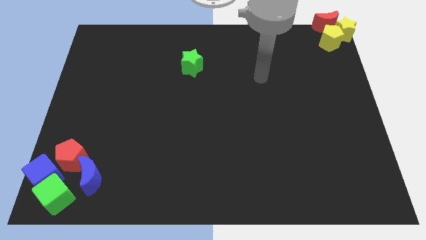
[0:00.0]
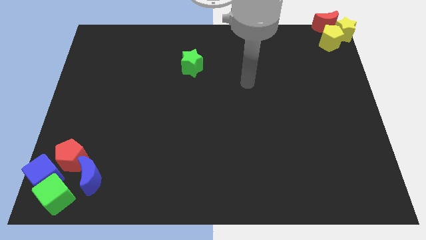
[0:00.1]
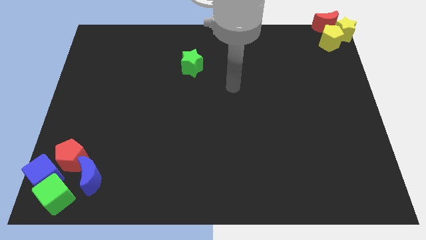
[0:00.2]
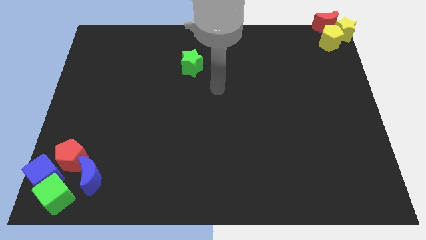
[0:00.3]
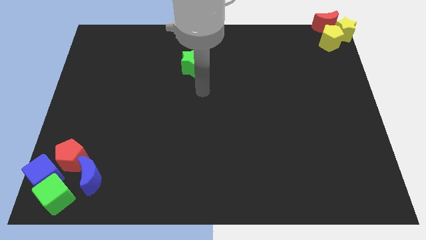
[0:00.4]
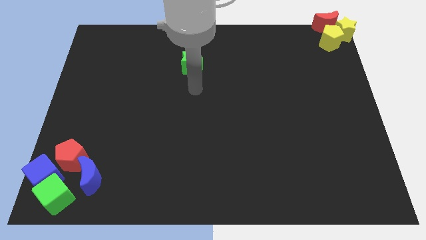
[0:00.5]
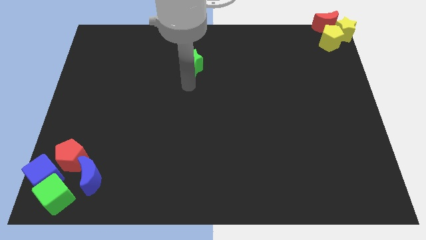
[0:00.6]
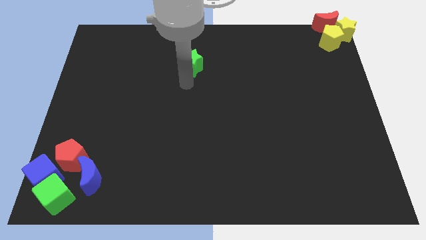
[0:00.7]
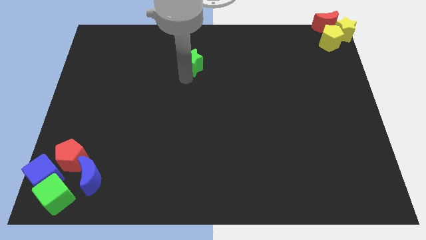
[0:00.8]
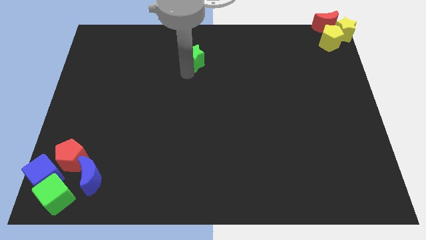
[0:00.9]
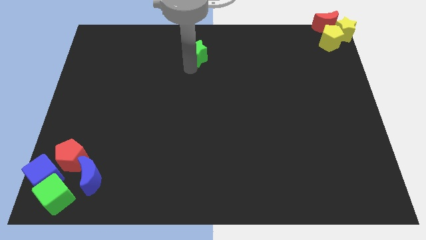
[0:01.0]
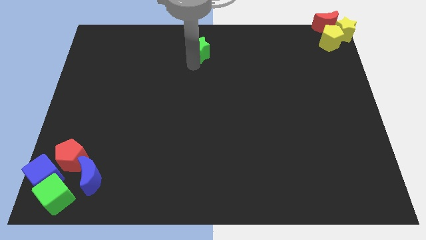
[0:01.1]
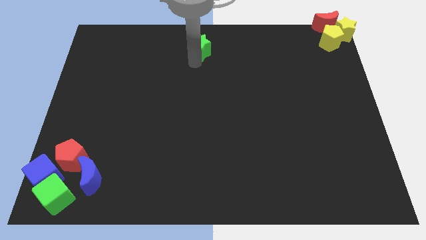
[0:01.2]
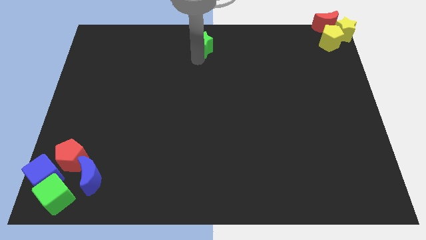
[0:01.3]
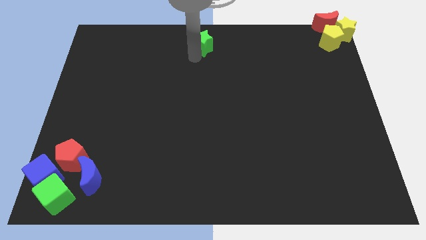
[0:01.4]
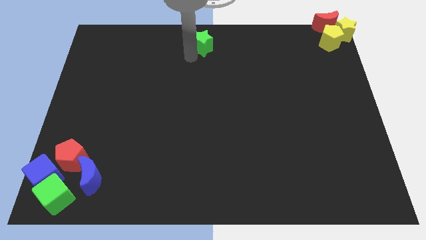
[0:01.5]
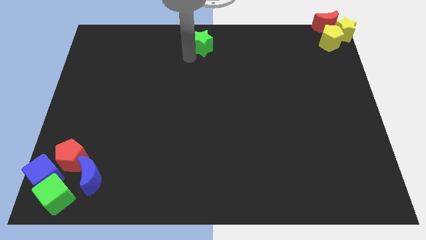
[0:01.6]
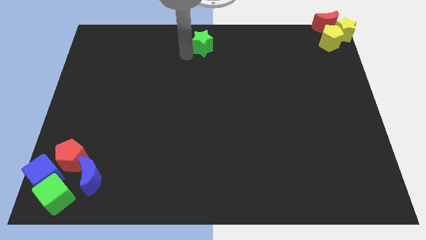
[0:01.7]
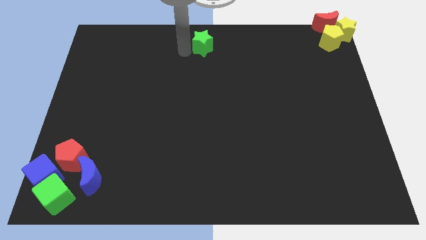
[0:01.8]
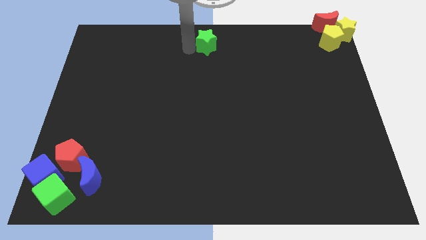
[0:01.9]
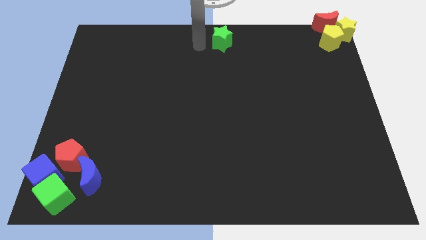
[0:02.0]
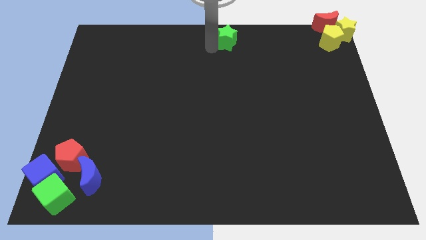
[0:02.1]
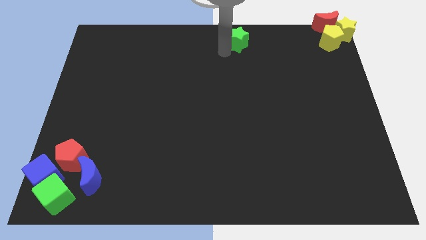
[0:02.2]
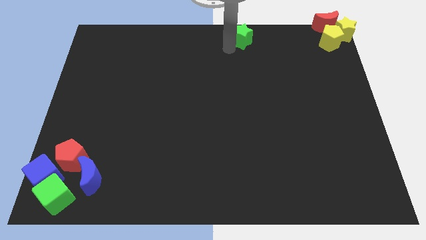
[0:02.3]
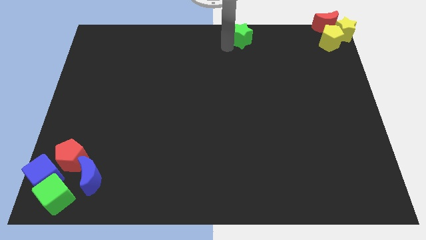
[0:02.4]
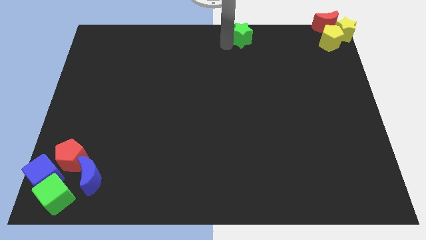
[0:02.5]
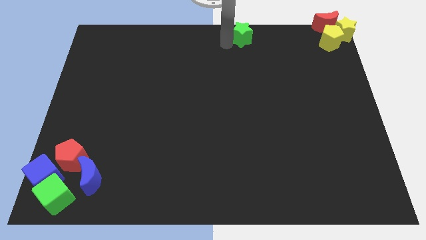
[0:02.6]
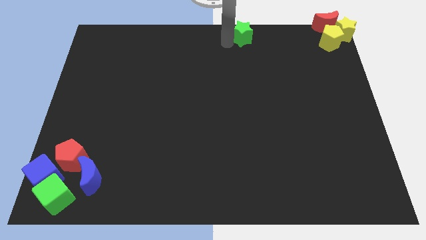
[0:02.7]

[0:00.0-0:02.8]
move the green star to top center

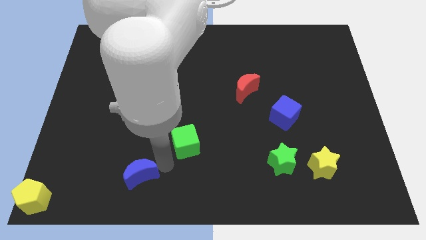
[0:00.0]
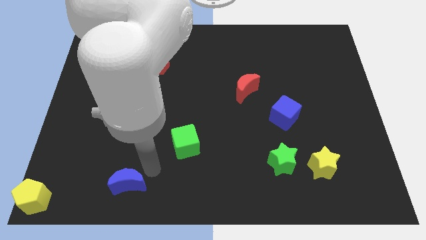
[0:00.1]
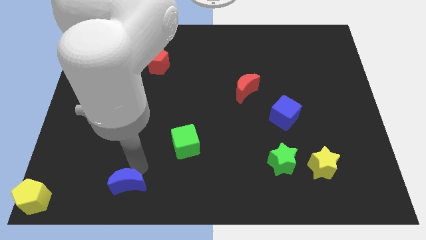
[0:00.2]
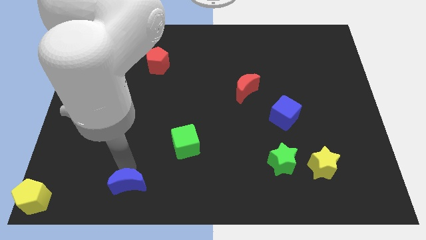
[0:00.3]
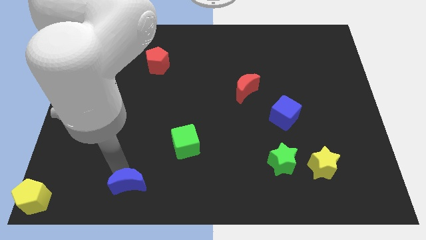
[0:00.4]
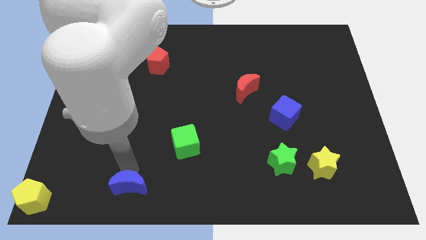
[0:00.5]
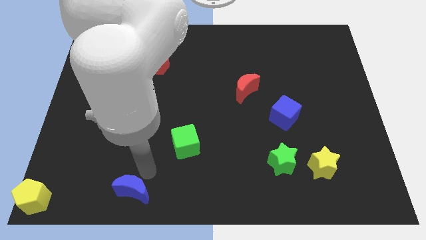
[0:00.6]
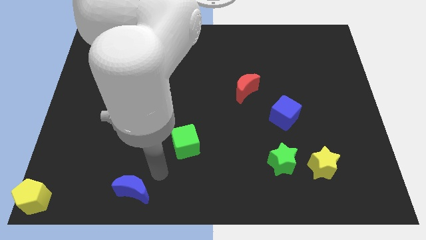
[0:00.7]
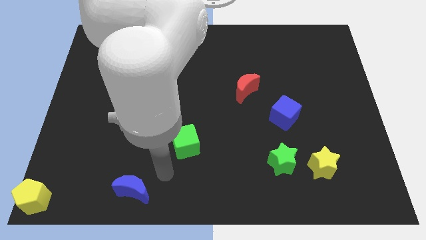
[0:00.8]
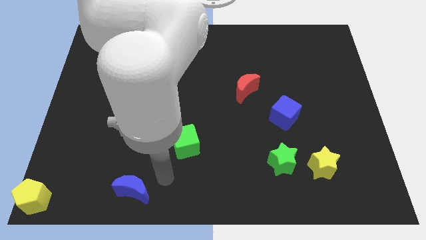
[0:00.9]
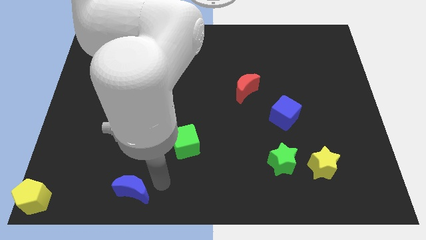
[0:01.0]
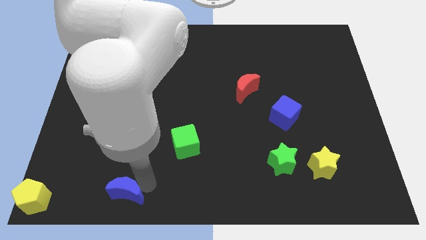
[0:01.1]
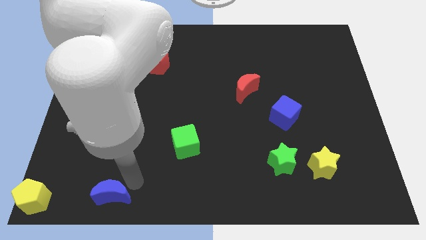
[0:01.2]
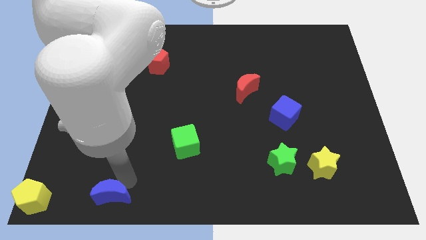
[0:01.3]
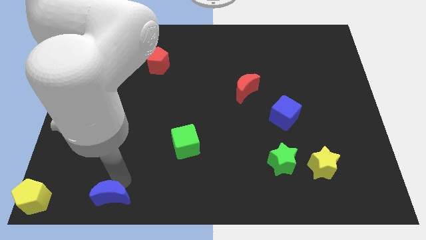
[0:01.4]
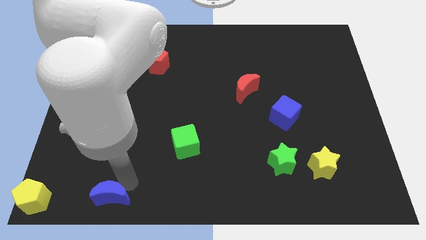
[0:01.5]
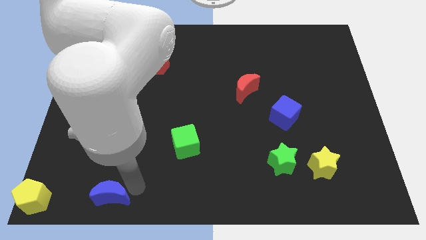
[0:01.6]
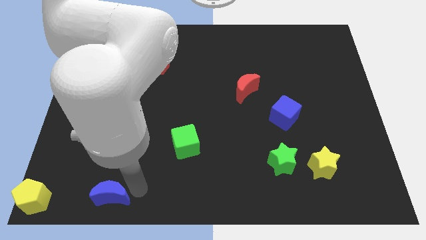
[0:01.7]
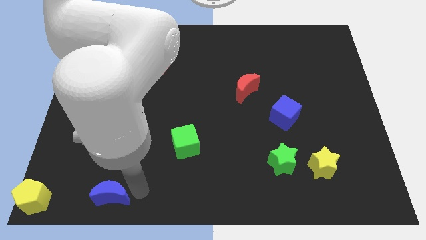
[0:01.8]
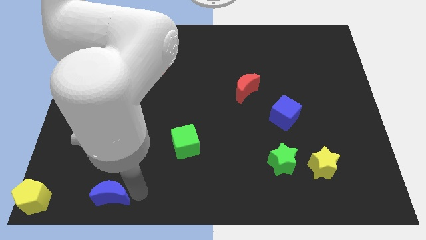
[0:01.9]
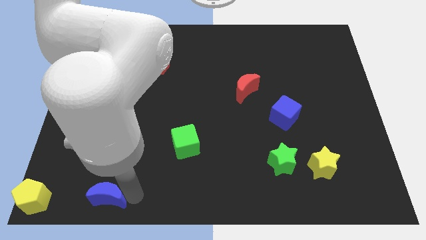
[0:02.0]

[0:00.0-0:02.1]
place blue moon to the right of yellow pentagon

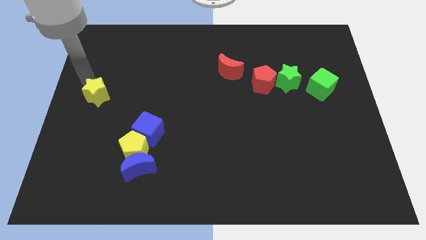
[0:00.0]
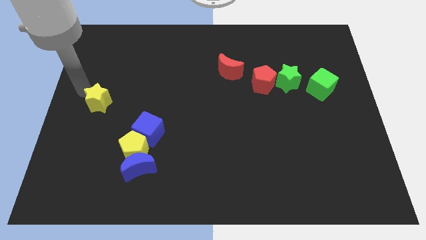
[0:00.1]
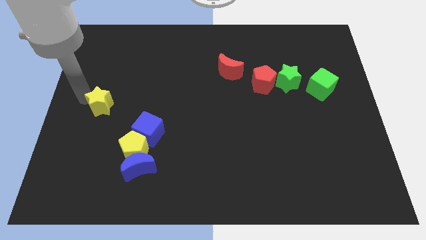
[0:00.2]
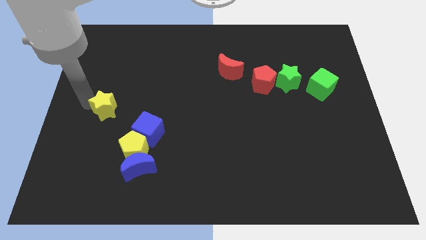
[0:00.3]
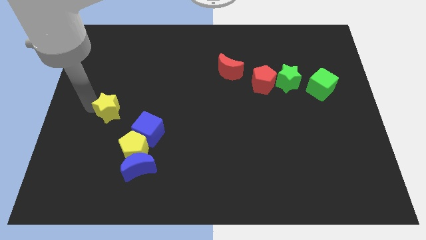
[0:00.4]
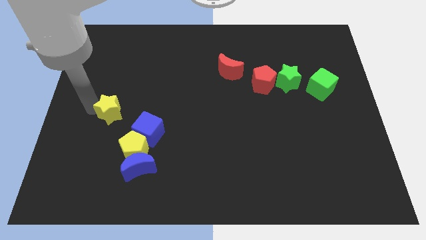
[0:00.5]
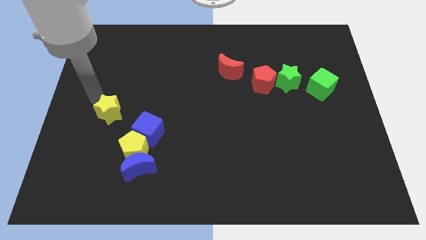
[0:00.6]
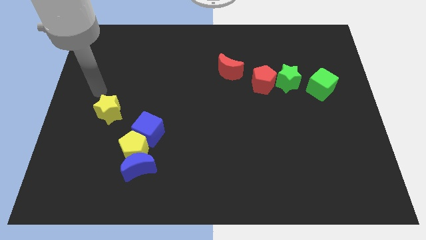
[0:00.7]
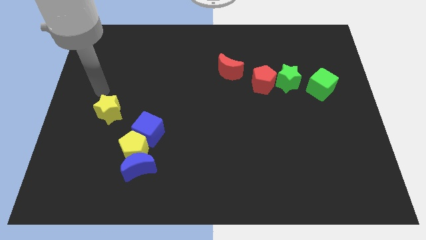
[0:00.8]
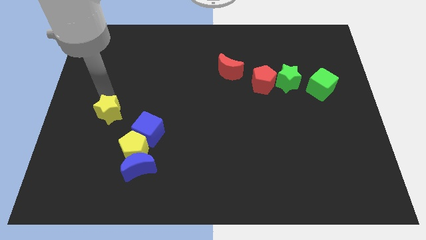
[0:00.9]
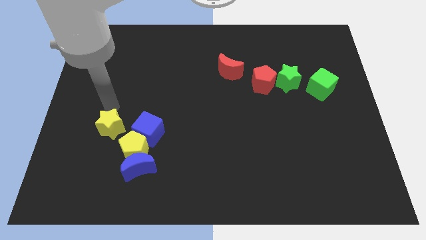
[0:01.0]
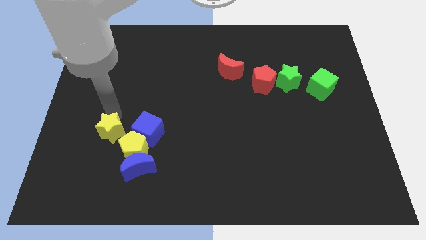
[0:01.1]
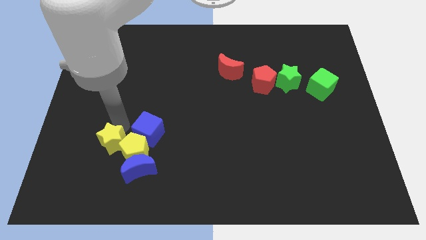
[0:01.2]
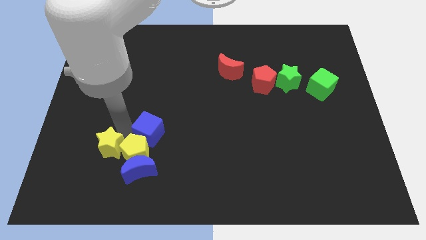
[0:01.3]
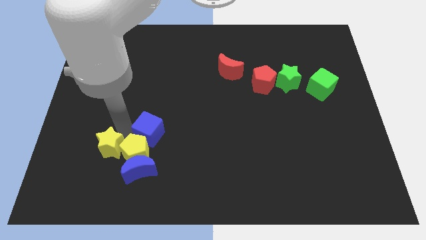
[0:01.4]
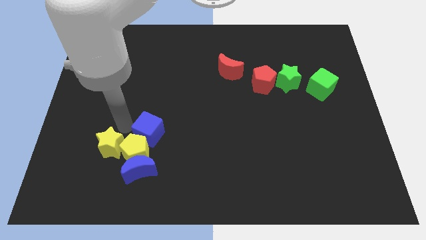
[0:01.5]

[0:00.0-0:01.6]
push the yellow star to the group of blocks

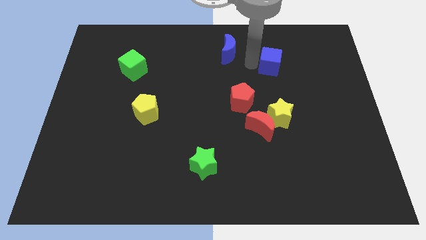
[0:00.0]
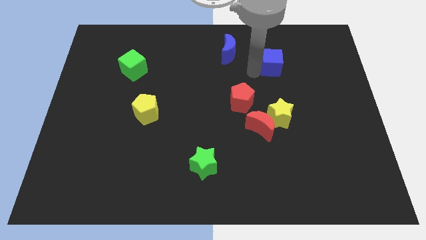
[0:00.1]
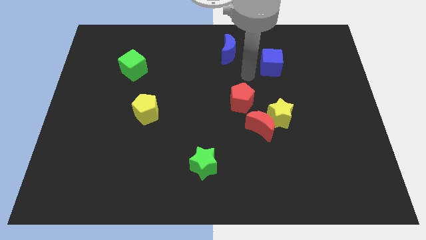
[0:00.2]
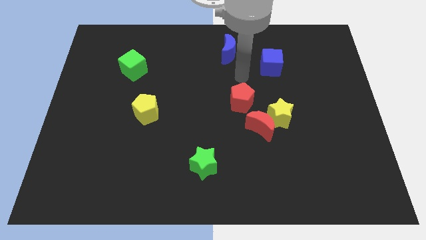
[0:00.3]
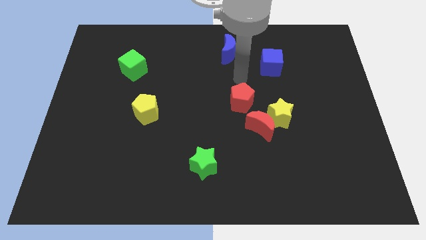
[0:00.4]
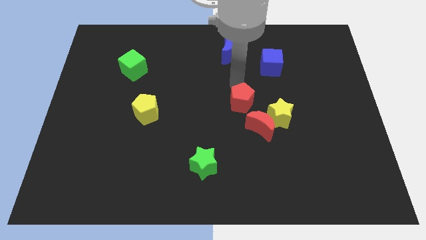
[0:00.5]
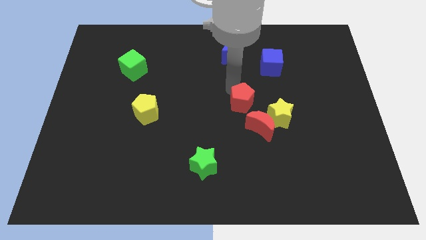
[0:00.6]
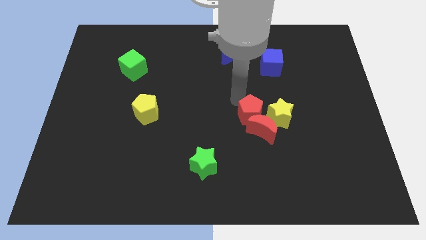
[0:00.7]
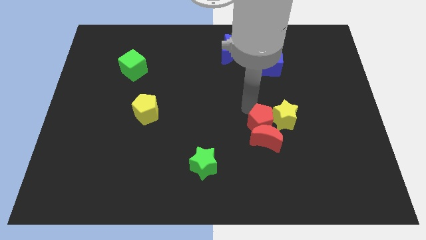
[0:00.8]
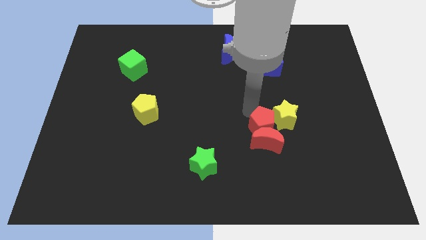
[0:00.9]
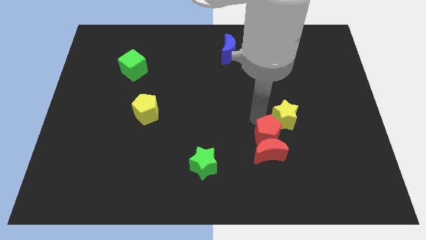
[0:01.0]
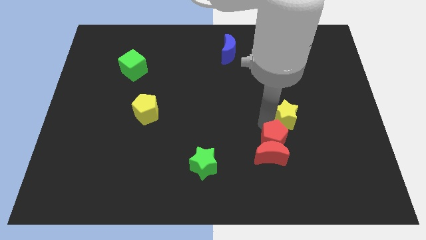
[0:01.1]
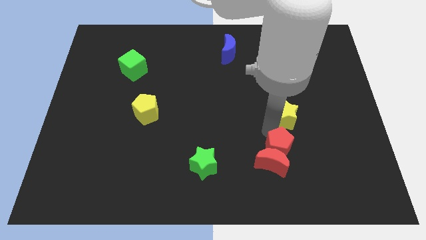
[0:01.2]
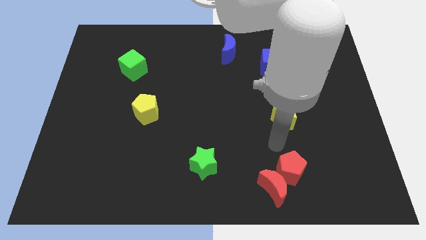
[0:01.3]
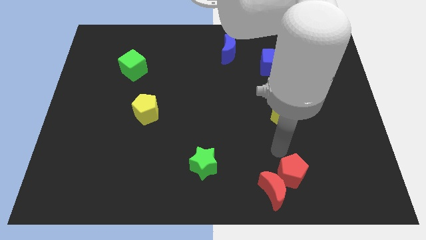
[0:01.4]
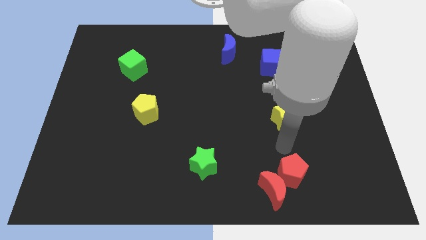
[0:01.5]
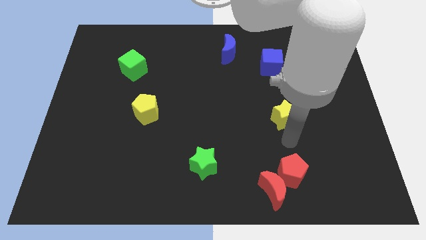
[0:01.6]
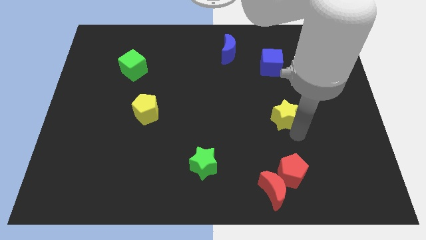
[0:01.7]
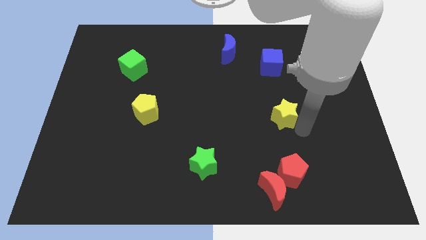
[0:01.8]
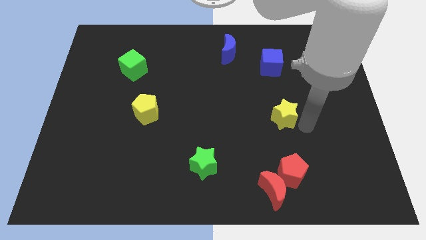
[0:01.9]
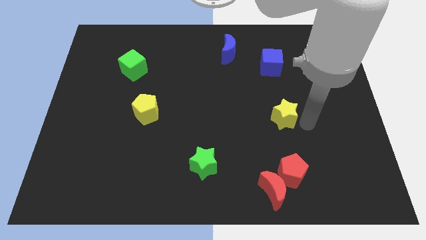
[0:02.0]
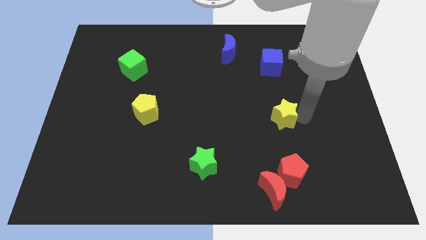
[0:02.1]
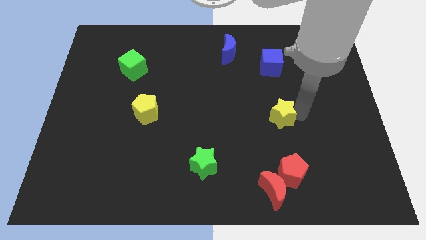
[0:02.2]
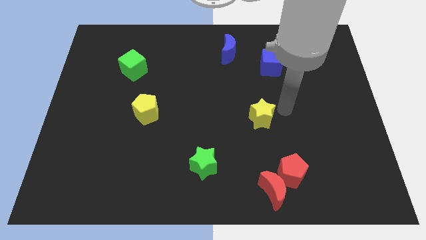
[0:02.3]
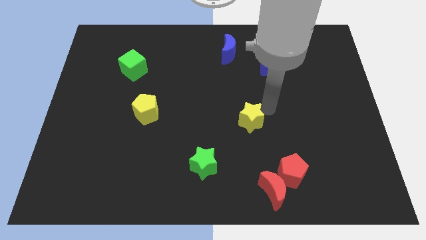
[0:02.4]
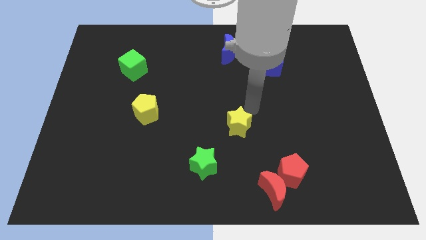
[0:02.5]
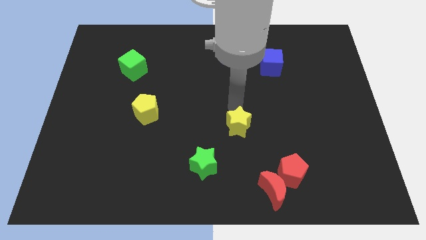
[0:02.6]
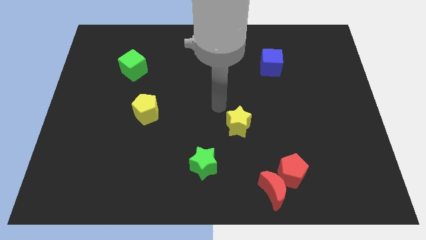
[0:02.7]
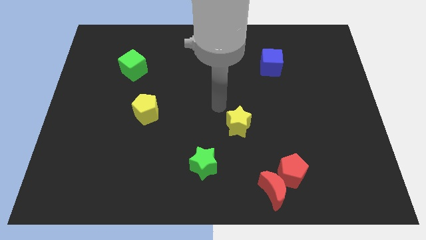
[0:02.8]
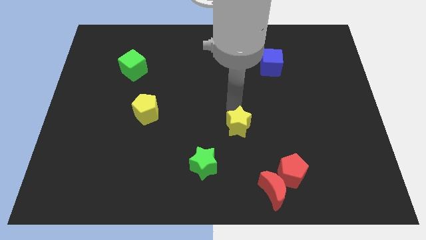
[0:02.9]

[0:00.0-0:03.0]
push the red pentagon into the red crescent
